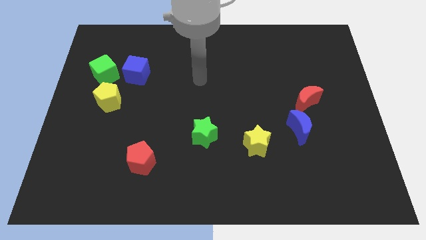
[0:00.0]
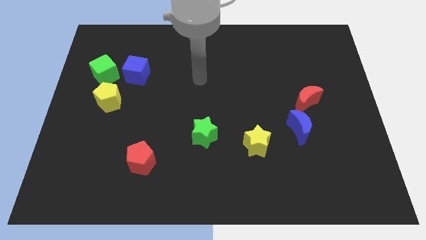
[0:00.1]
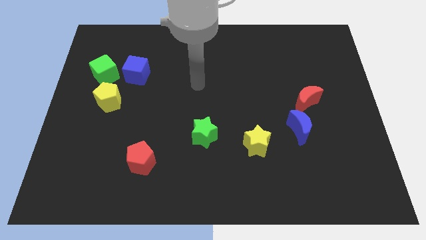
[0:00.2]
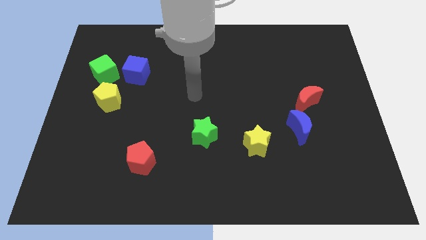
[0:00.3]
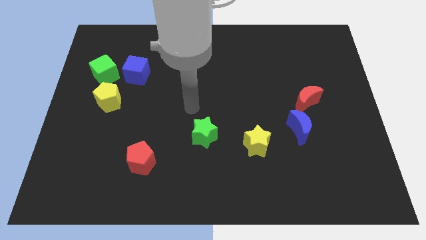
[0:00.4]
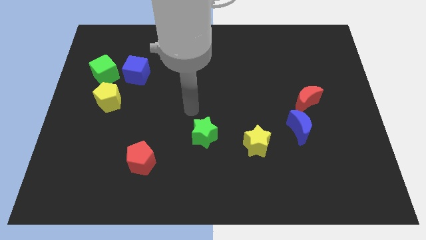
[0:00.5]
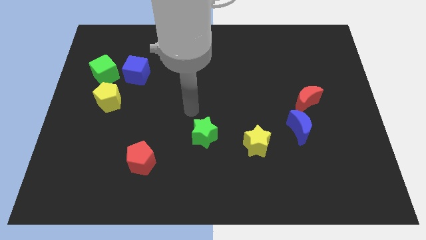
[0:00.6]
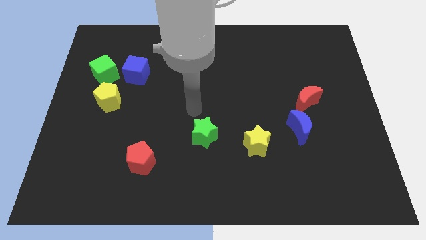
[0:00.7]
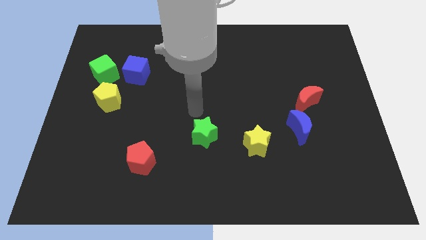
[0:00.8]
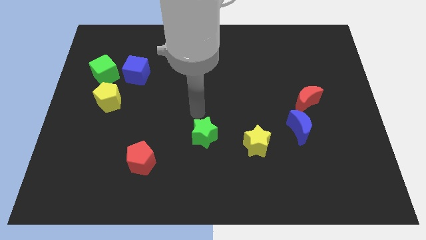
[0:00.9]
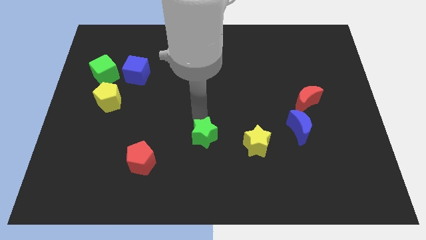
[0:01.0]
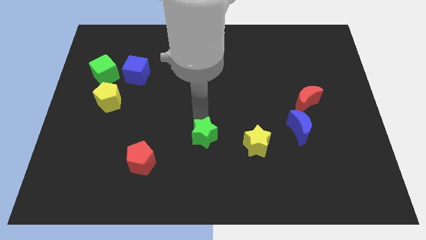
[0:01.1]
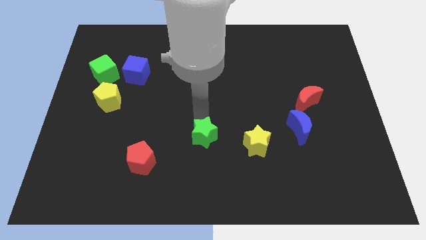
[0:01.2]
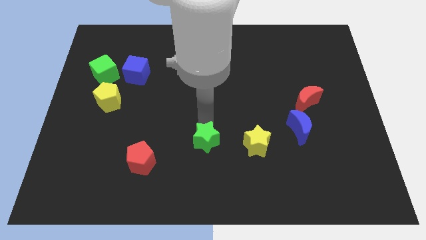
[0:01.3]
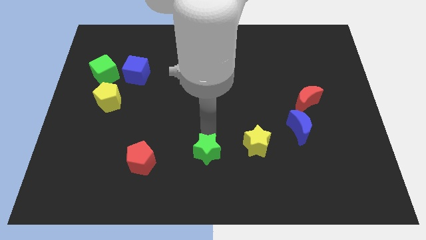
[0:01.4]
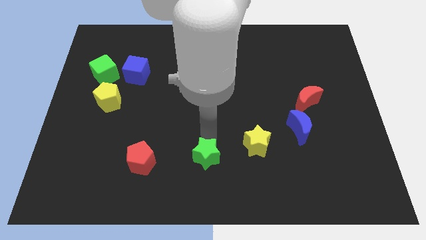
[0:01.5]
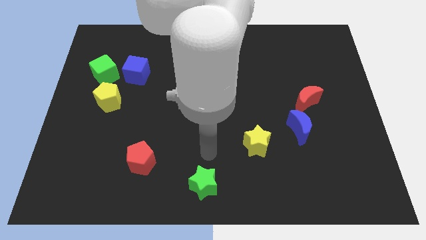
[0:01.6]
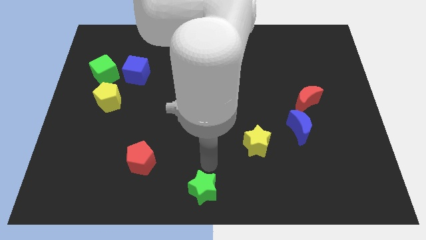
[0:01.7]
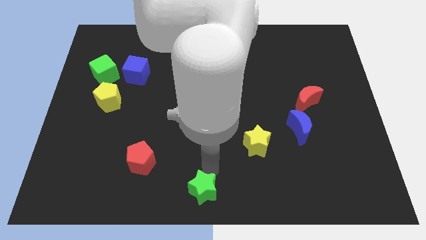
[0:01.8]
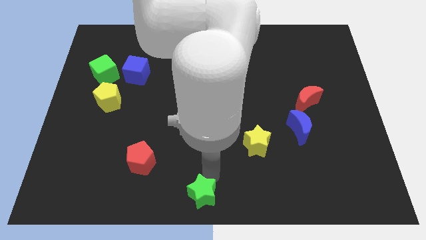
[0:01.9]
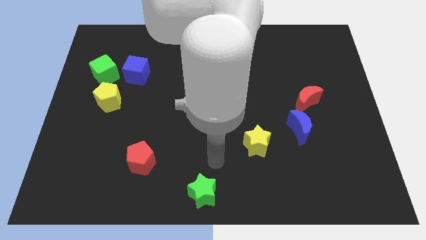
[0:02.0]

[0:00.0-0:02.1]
place the green star at bottom center of the board

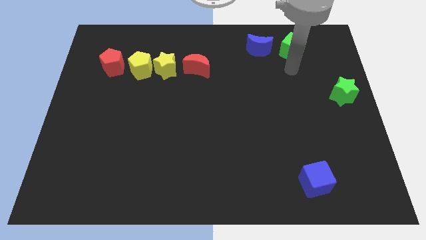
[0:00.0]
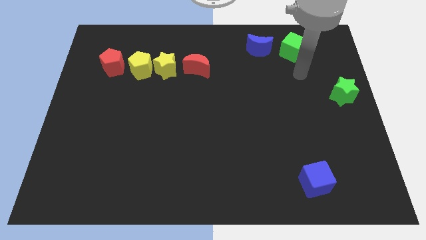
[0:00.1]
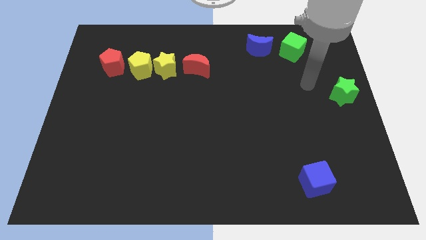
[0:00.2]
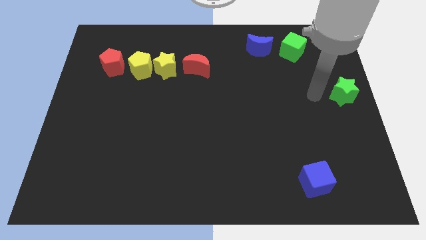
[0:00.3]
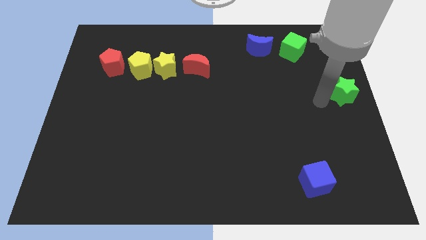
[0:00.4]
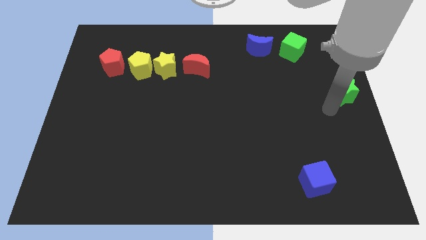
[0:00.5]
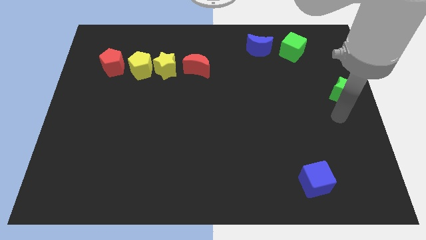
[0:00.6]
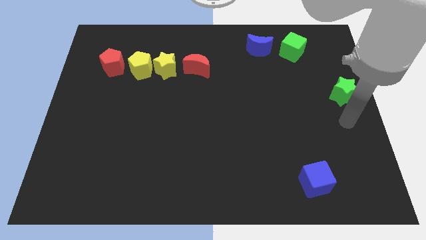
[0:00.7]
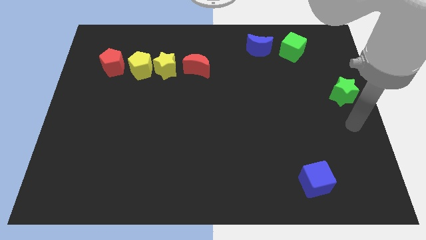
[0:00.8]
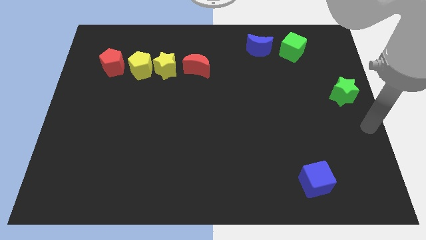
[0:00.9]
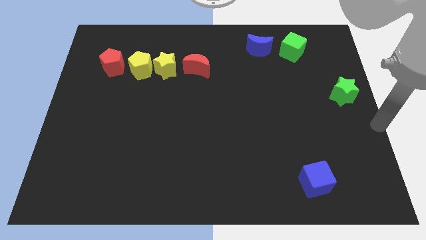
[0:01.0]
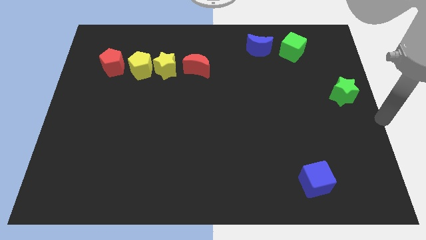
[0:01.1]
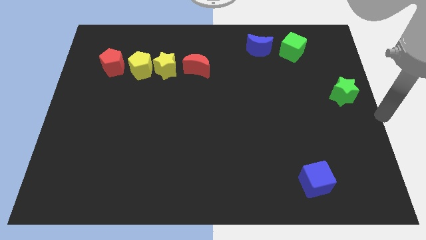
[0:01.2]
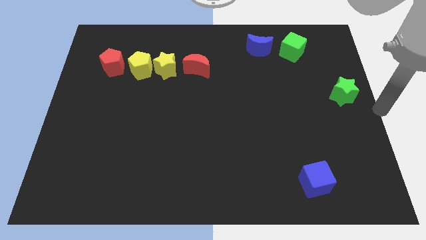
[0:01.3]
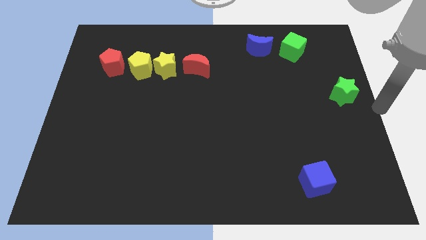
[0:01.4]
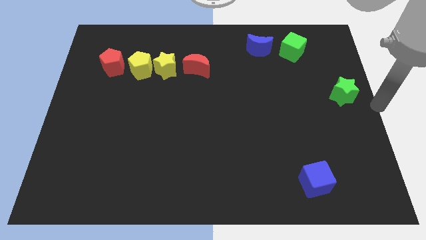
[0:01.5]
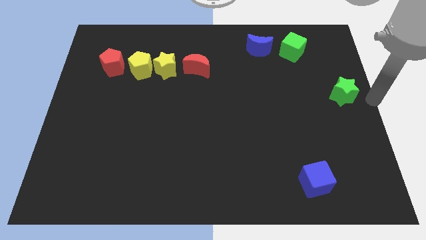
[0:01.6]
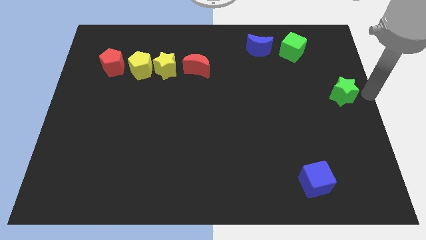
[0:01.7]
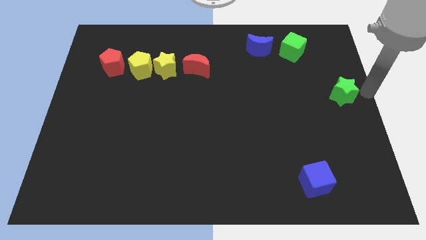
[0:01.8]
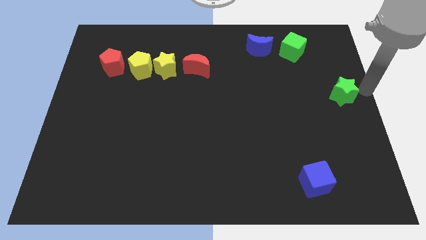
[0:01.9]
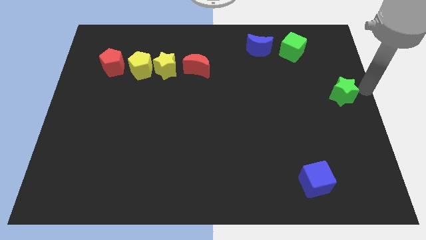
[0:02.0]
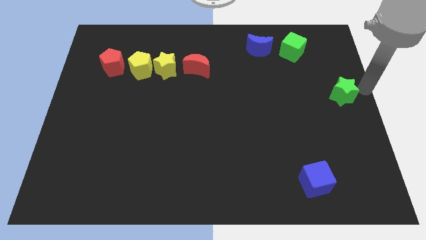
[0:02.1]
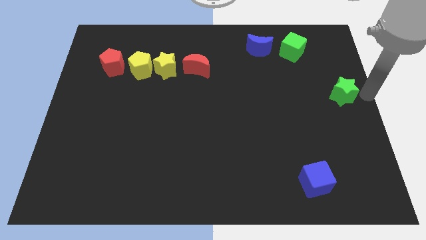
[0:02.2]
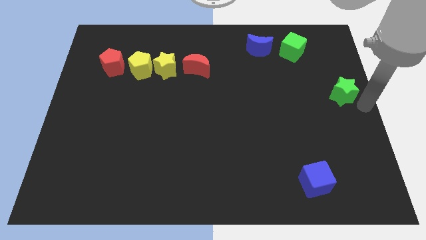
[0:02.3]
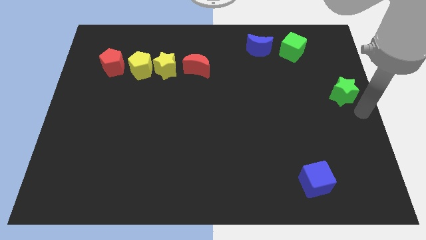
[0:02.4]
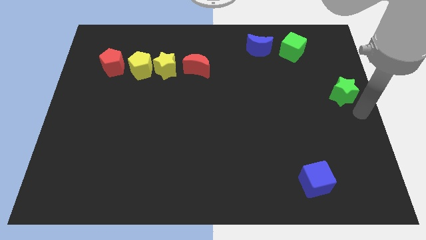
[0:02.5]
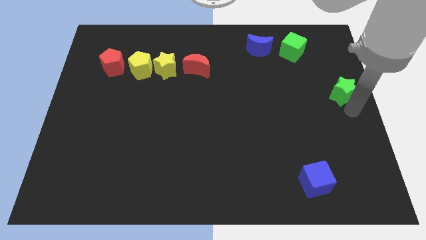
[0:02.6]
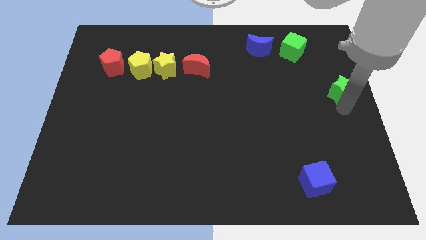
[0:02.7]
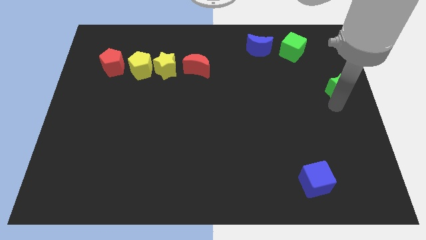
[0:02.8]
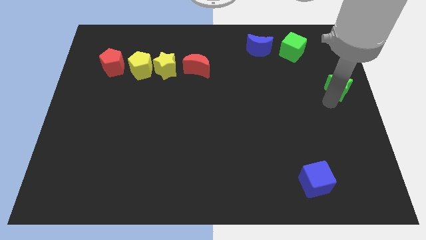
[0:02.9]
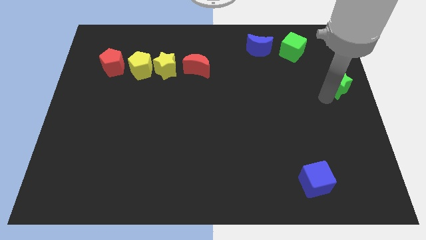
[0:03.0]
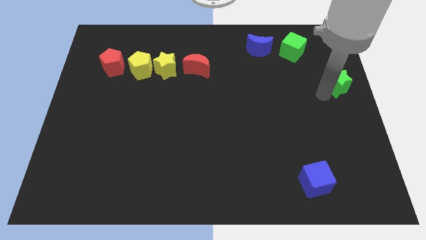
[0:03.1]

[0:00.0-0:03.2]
slide the green star up slightly

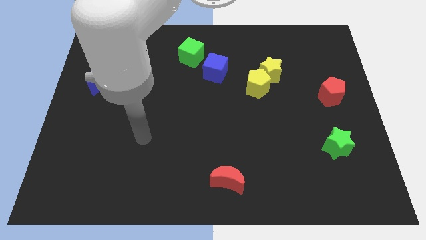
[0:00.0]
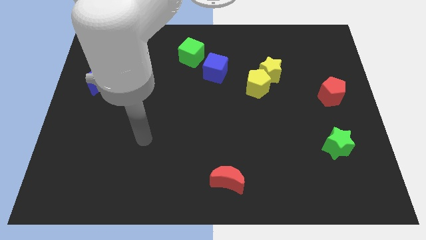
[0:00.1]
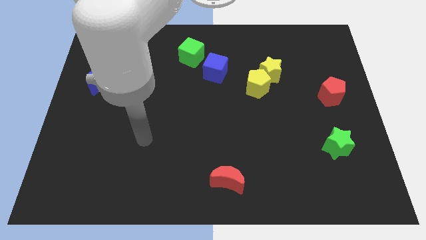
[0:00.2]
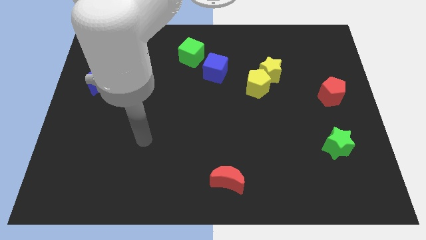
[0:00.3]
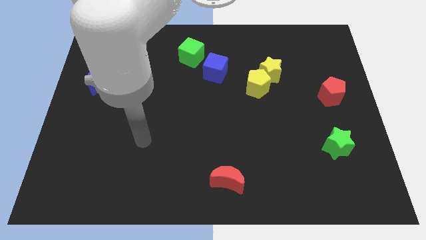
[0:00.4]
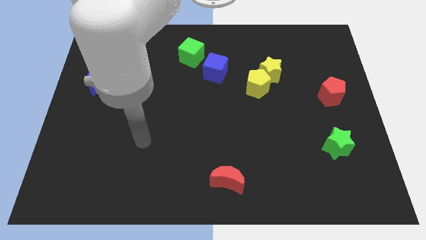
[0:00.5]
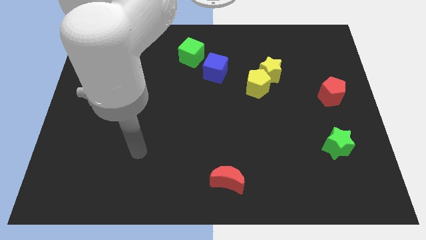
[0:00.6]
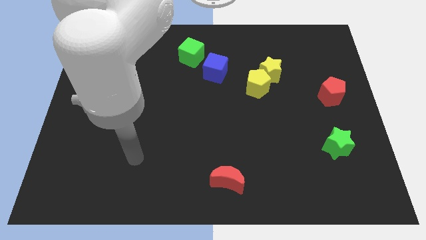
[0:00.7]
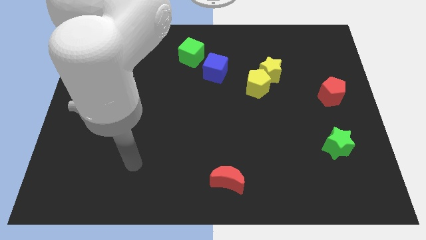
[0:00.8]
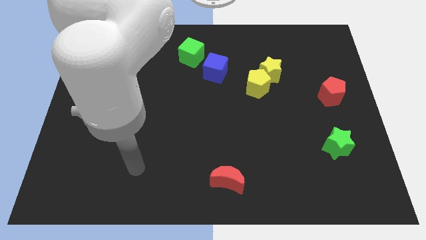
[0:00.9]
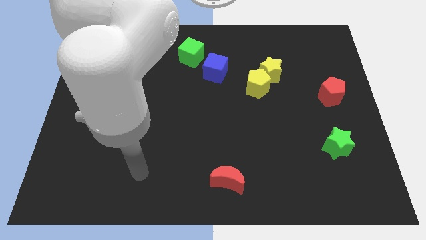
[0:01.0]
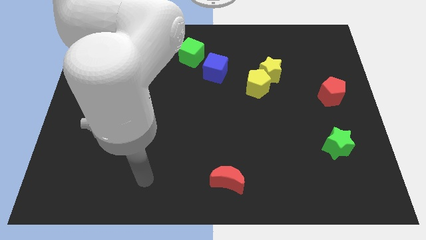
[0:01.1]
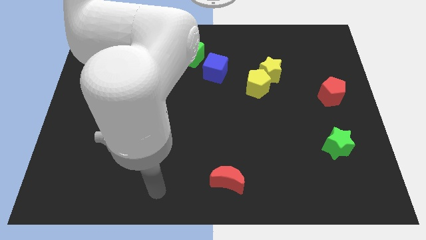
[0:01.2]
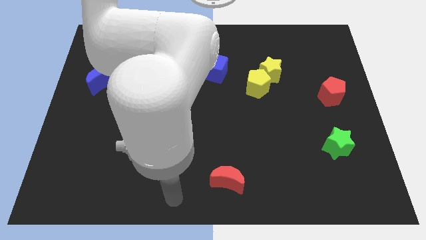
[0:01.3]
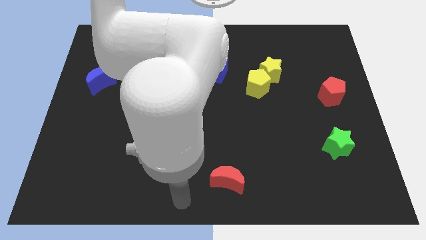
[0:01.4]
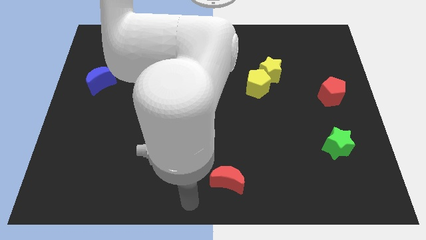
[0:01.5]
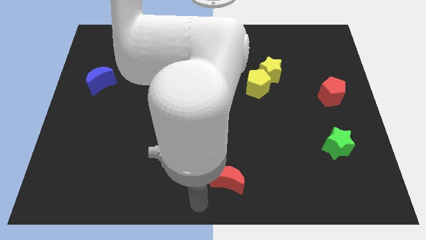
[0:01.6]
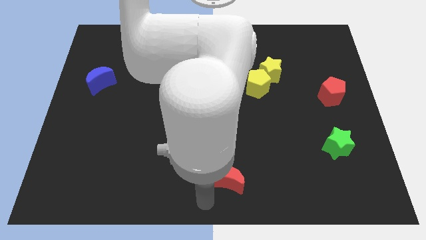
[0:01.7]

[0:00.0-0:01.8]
move the arm below the red crescent

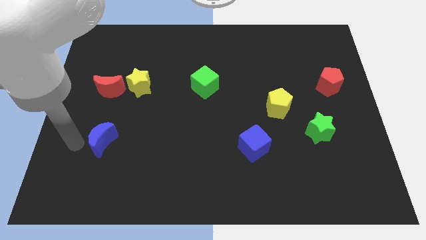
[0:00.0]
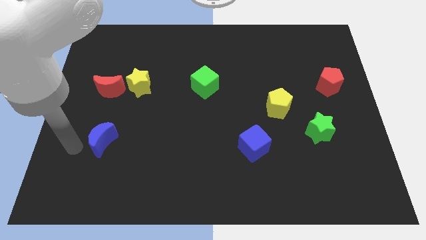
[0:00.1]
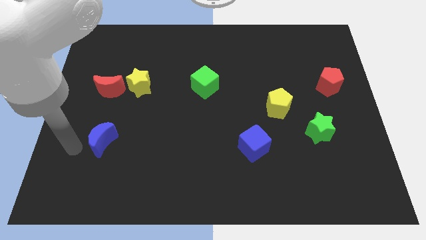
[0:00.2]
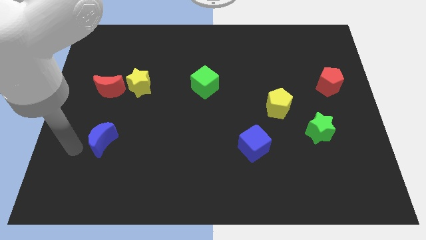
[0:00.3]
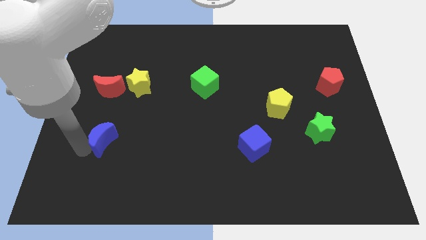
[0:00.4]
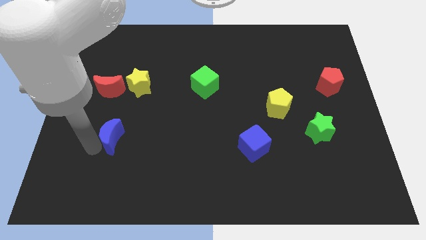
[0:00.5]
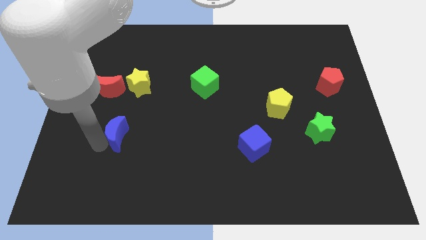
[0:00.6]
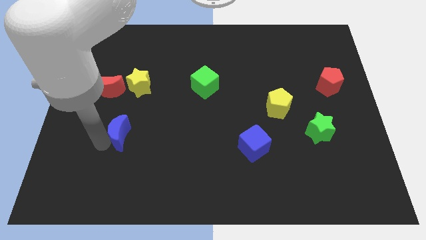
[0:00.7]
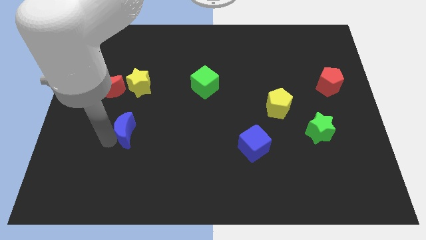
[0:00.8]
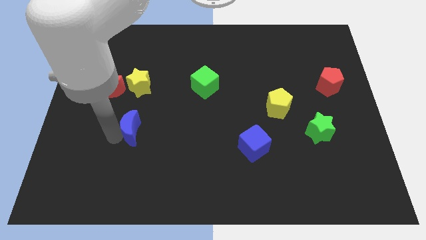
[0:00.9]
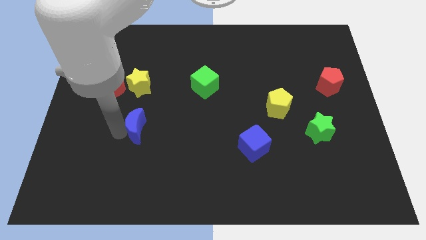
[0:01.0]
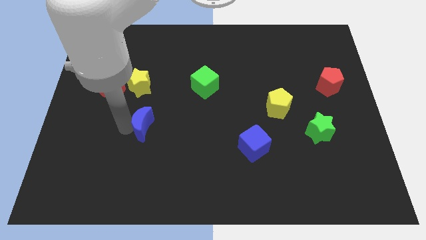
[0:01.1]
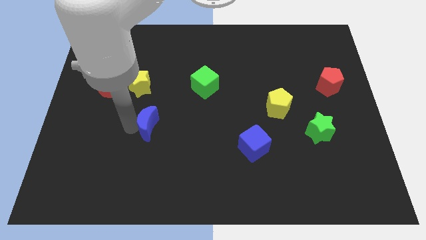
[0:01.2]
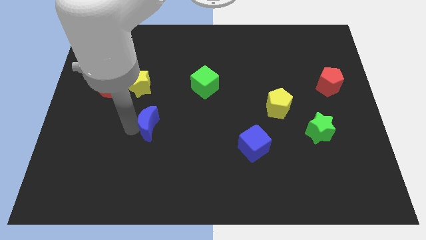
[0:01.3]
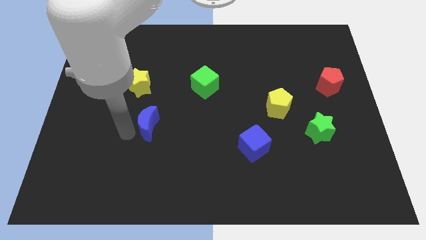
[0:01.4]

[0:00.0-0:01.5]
place the blue crescent below the yellow star

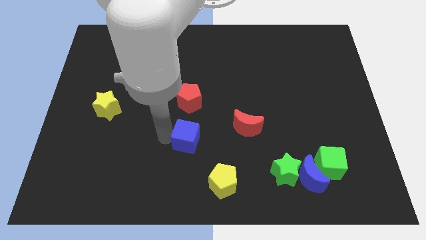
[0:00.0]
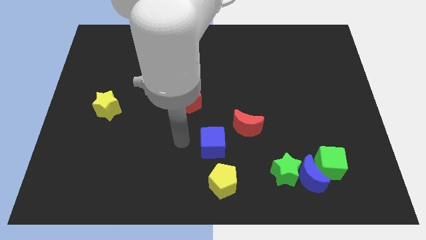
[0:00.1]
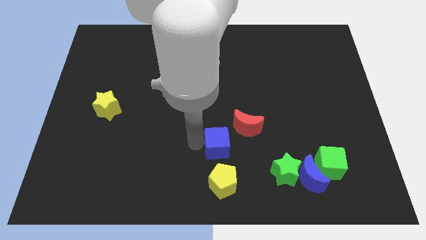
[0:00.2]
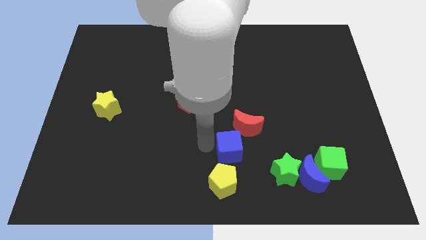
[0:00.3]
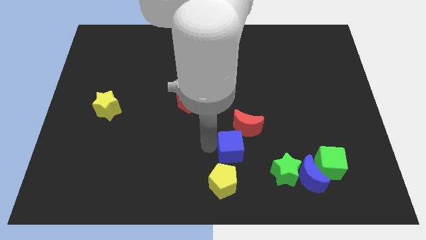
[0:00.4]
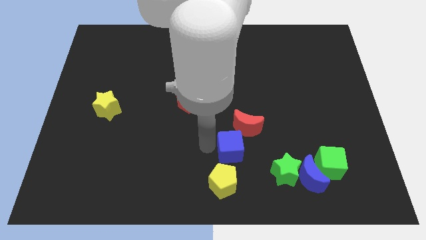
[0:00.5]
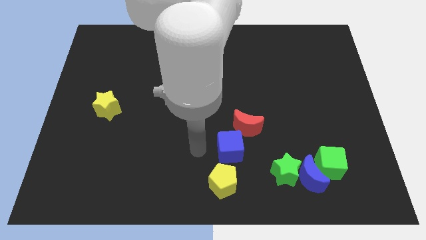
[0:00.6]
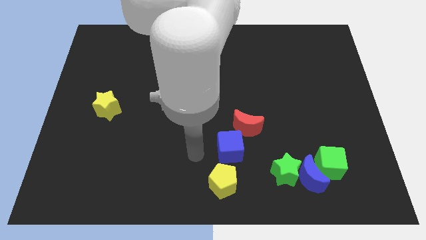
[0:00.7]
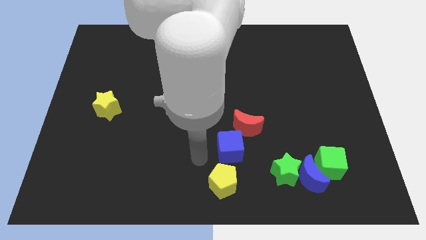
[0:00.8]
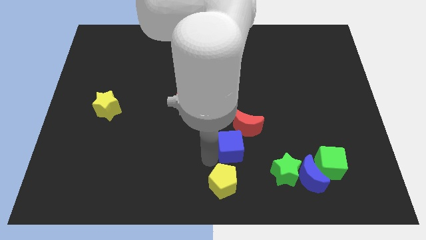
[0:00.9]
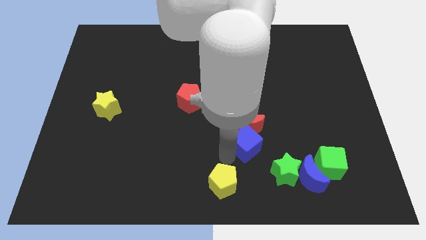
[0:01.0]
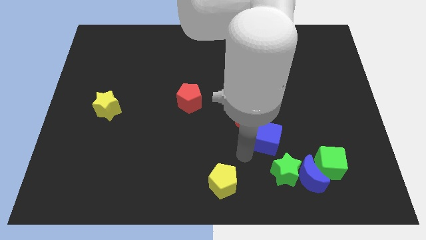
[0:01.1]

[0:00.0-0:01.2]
place blue cube to the bottom of red moon
